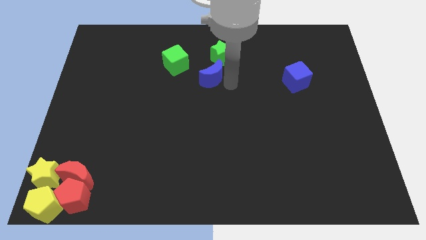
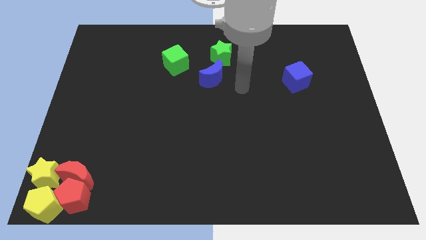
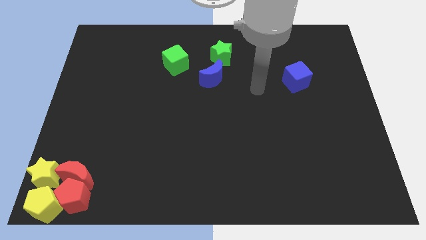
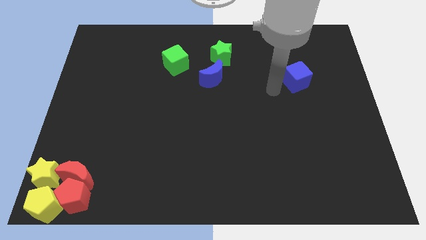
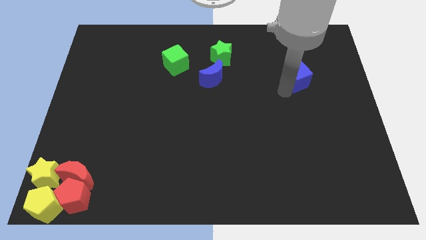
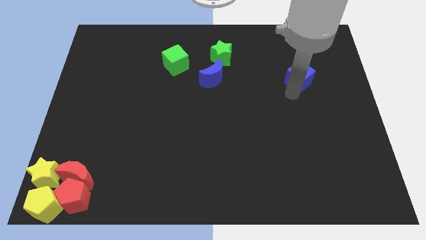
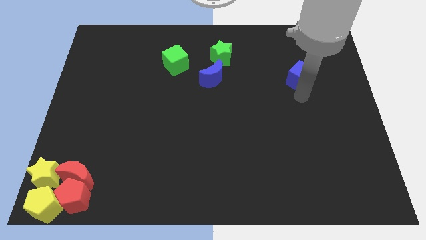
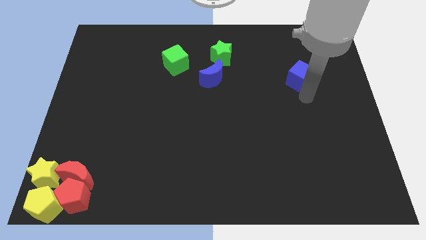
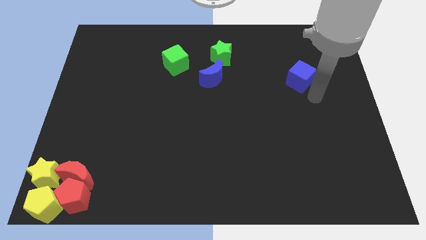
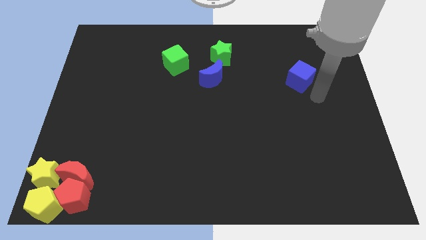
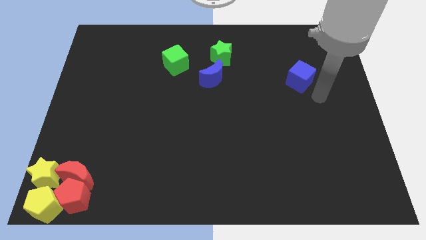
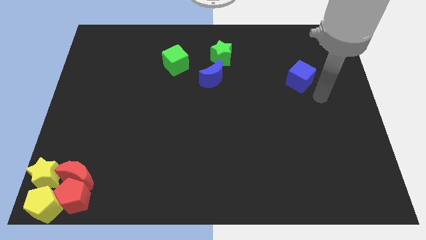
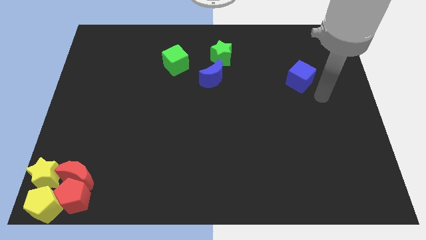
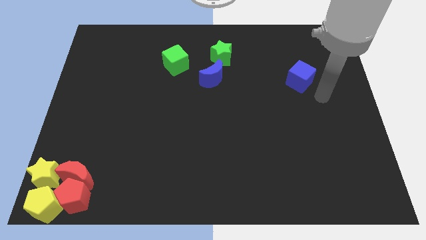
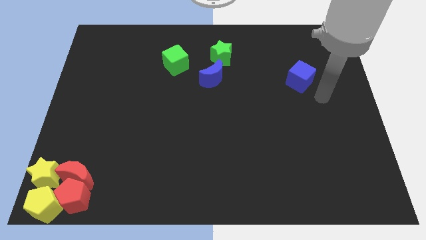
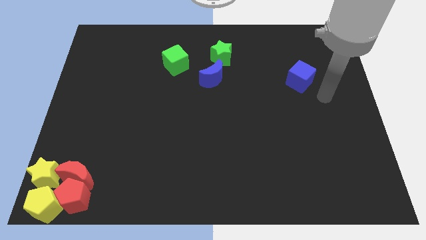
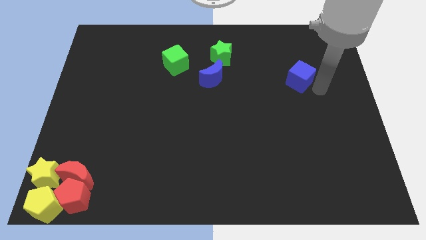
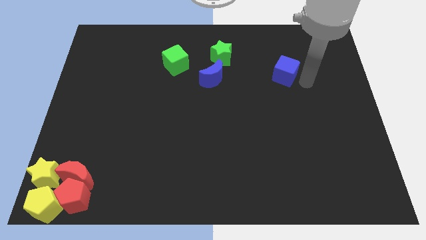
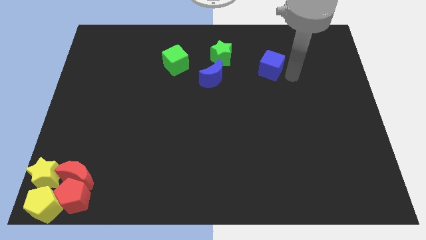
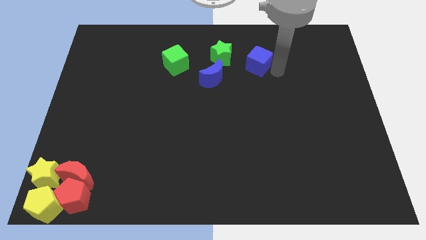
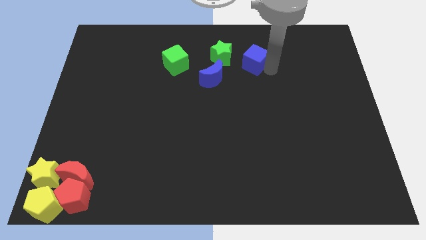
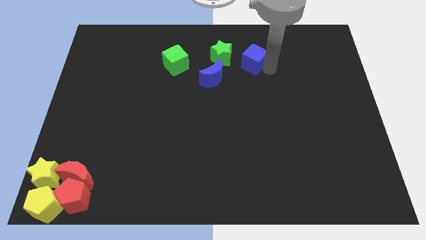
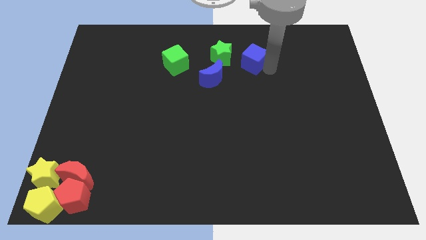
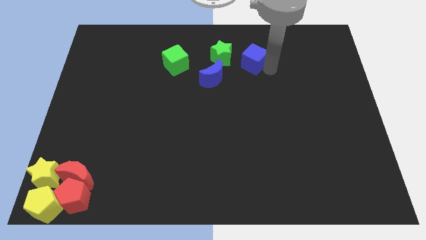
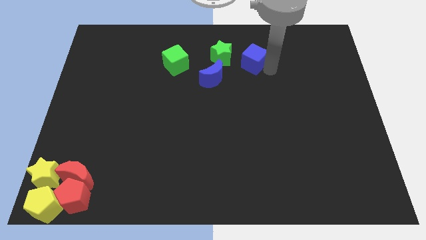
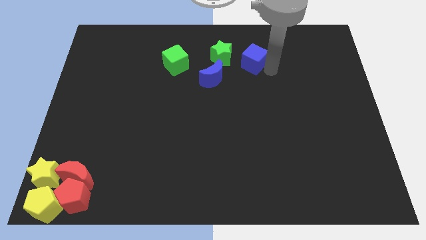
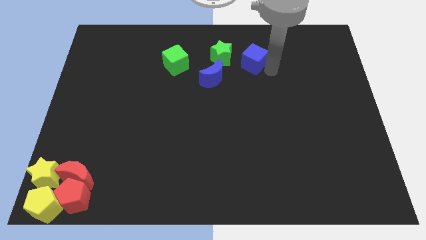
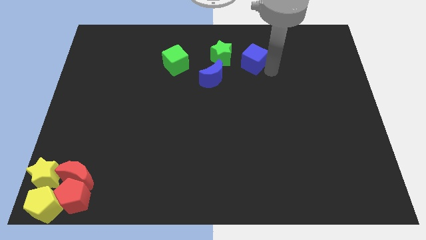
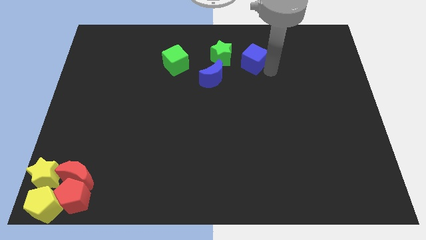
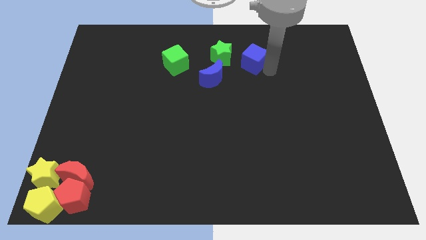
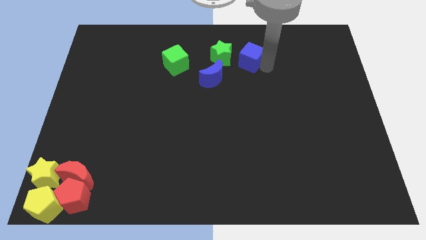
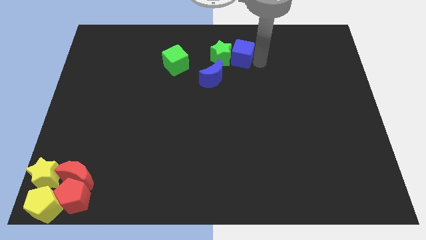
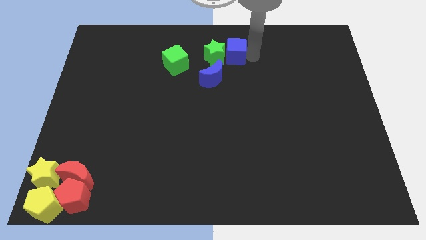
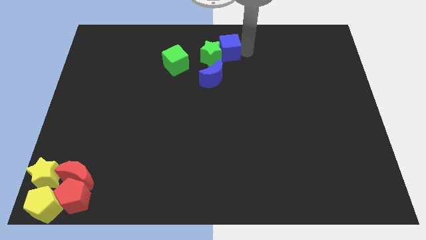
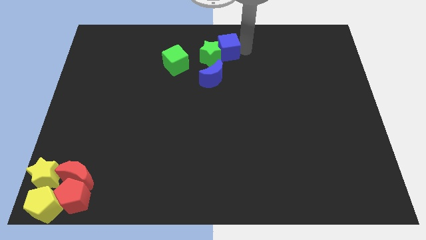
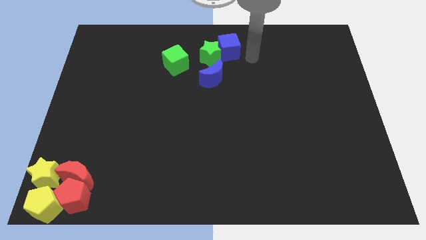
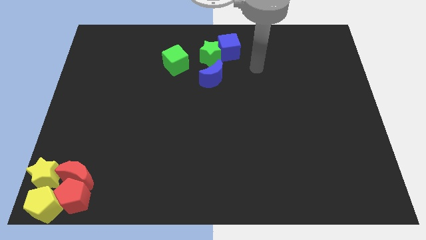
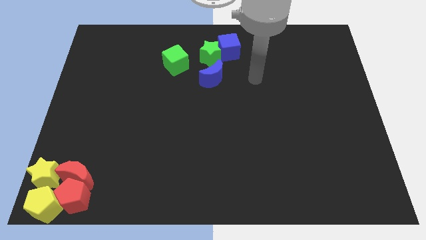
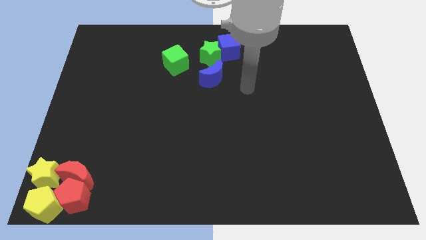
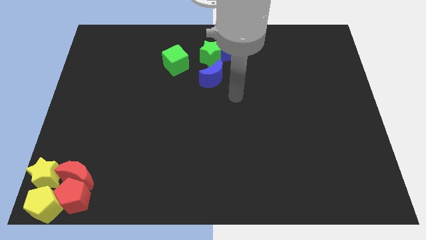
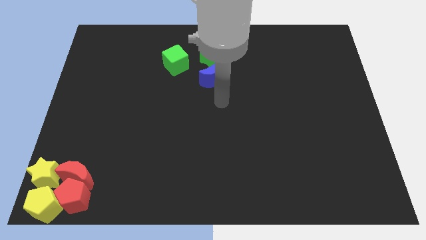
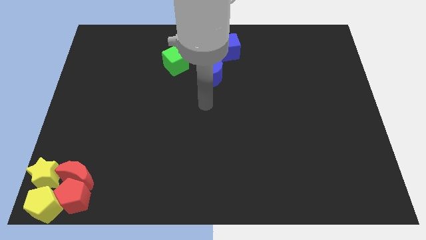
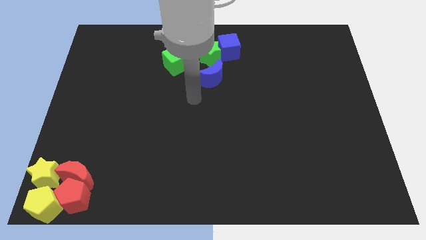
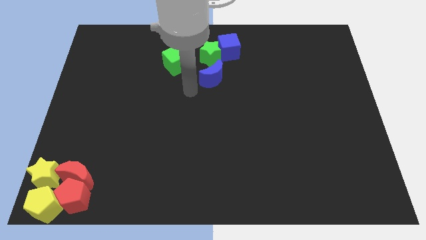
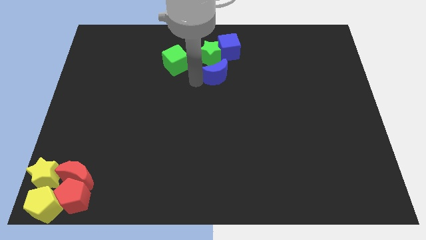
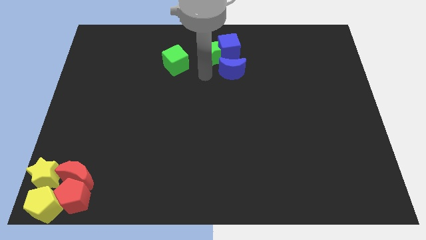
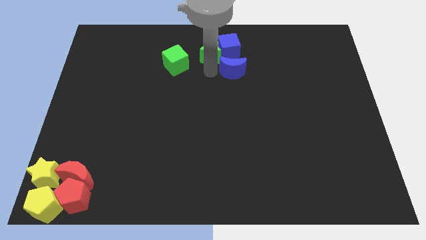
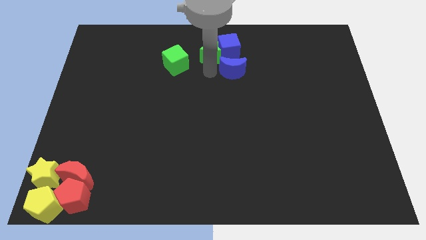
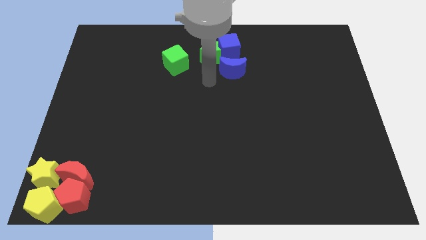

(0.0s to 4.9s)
move blue blocks close to green star

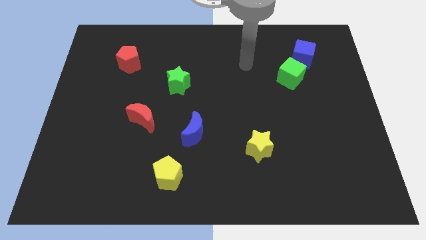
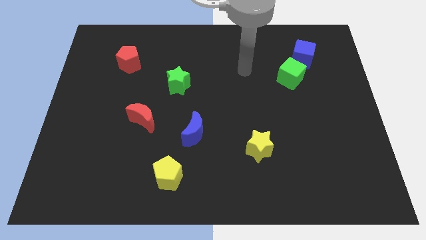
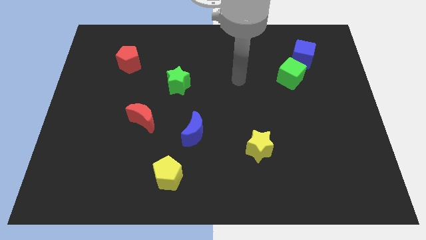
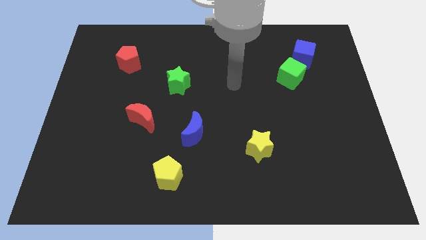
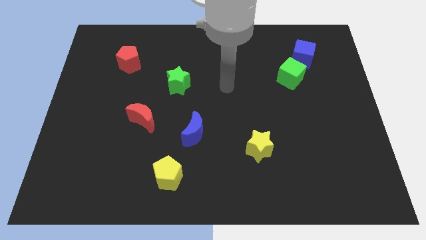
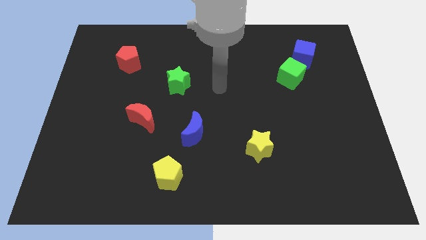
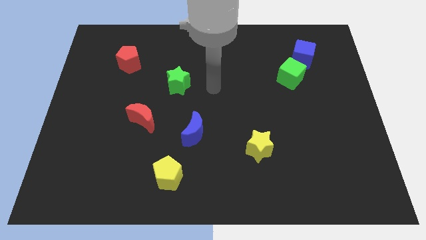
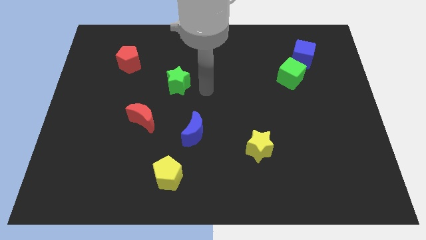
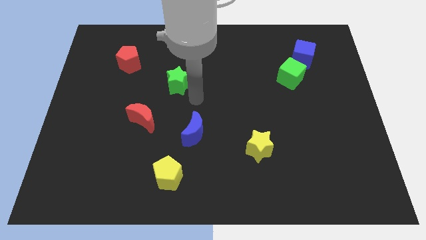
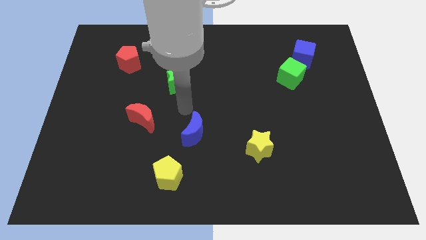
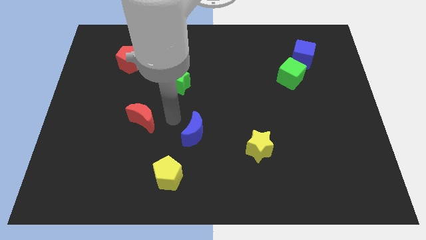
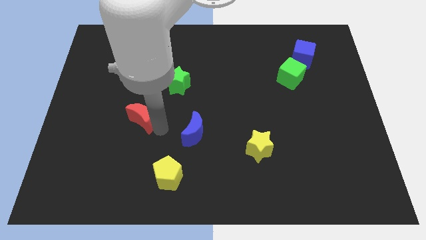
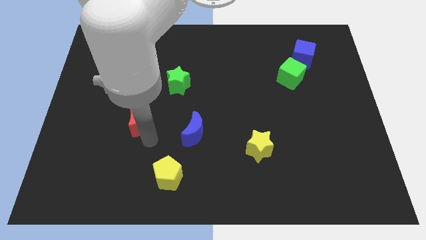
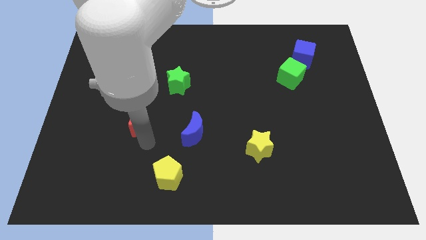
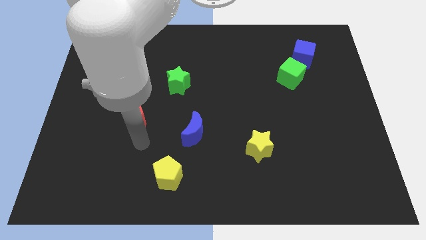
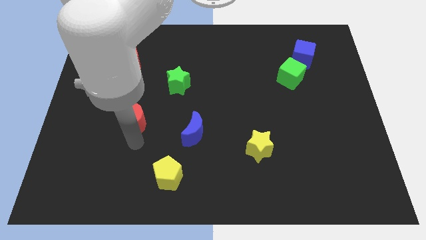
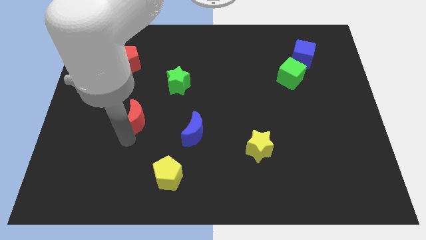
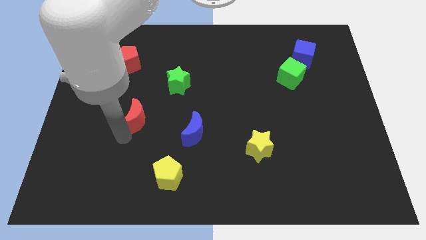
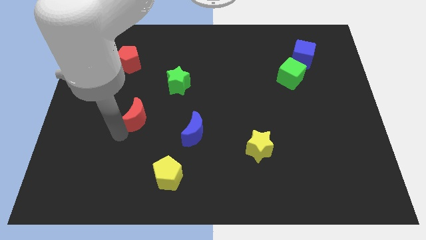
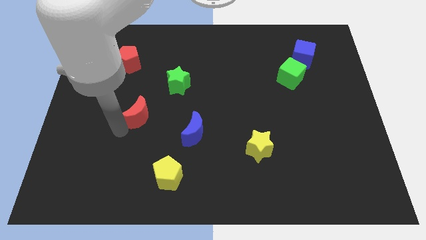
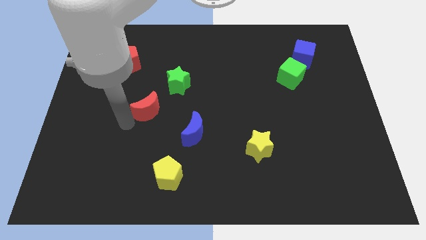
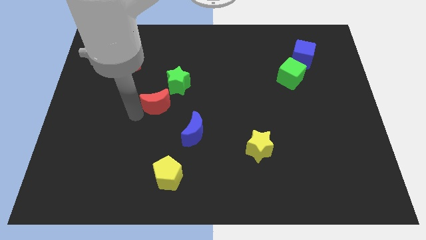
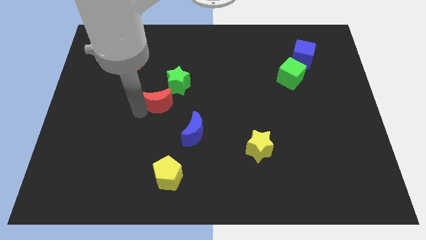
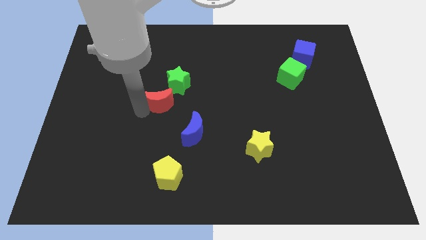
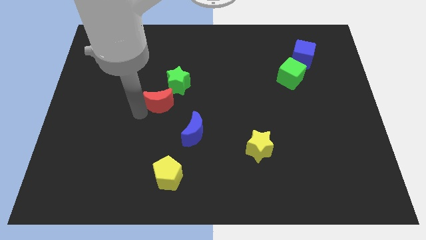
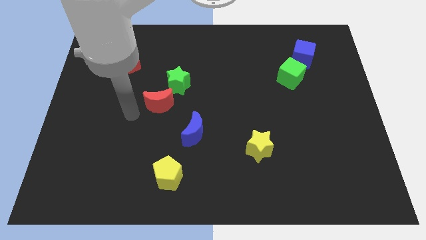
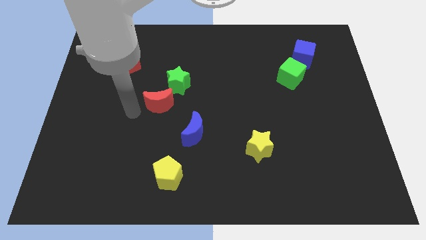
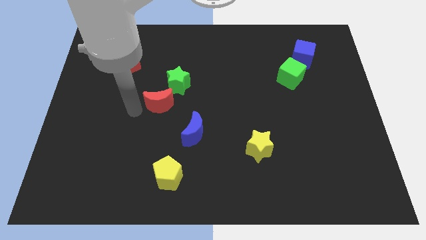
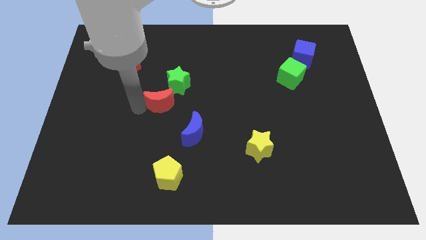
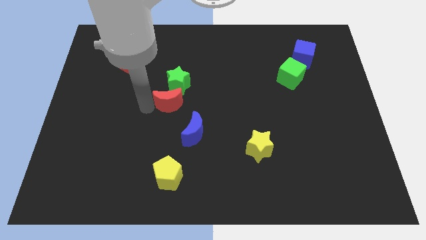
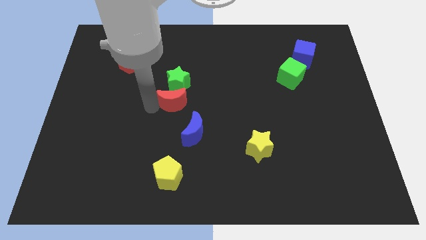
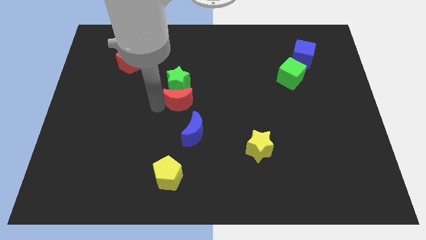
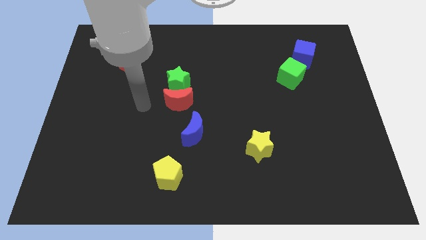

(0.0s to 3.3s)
place the red crescent below green star

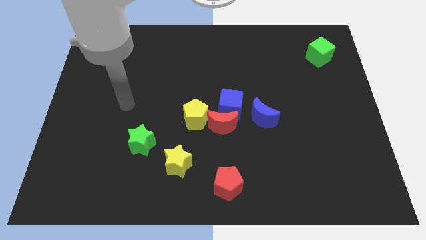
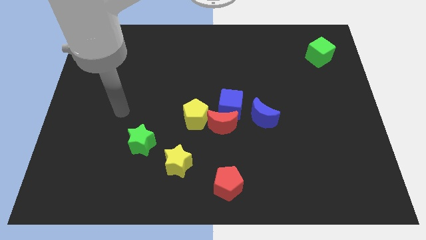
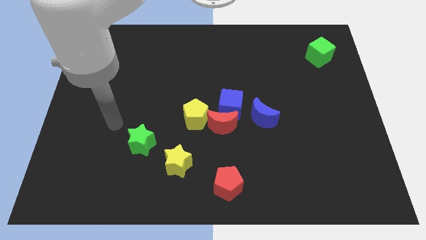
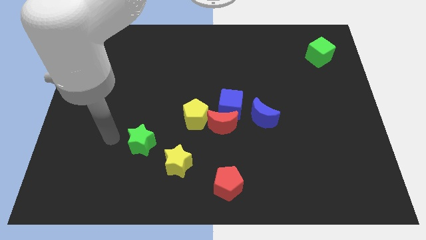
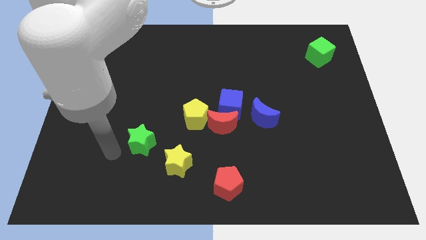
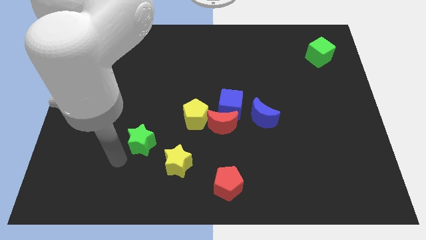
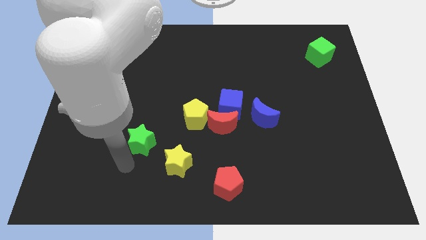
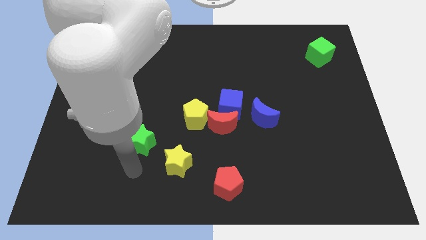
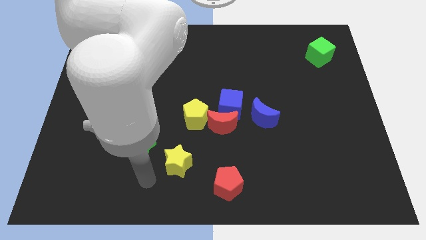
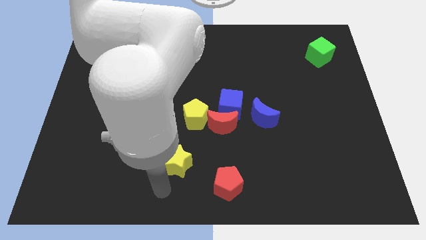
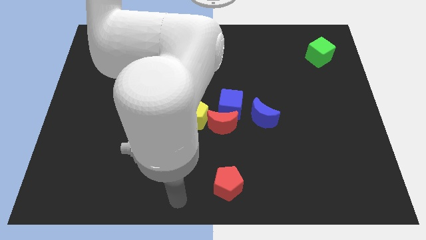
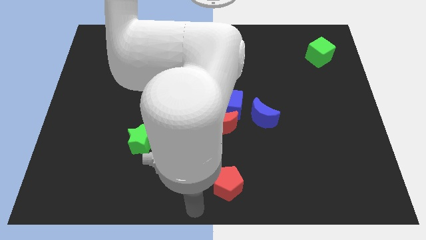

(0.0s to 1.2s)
place your hand at the bottom center of the board
